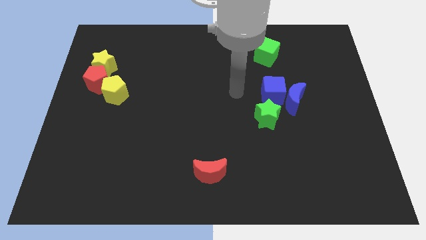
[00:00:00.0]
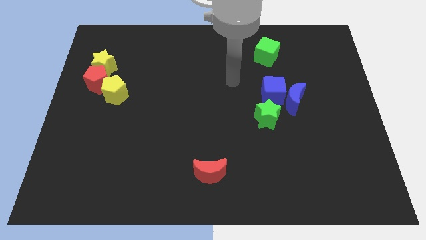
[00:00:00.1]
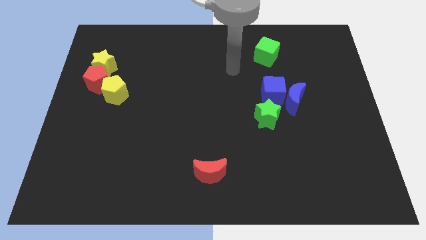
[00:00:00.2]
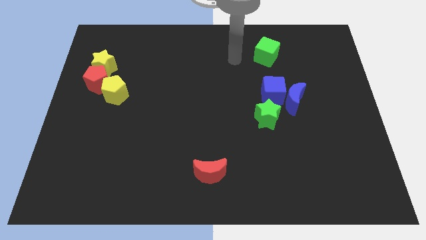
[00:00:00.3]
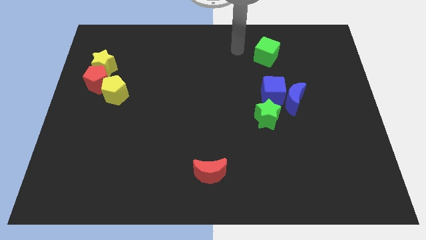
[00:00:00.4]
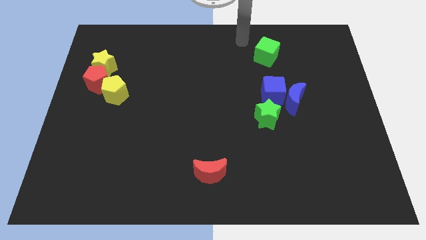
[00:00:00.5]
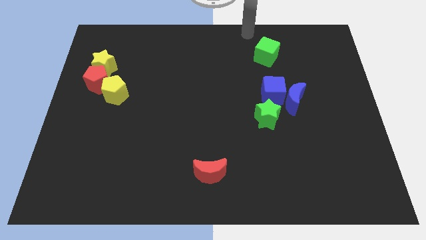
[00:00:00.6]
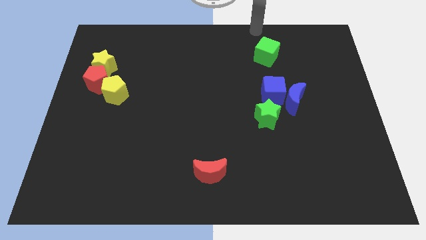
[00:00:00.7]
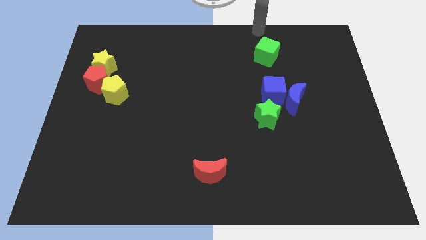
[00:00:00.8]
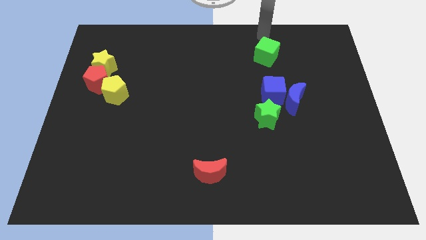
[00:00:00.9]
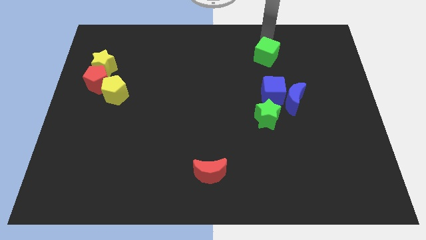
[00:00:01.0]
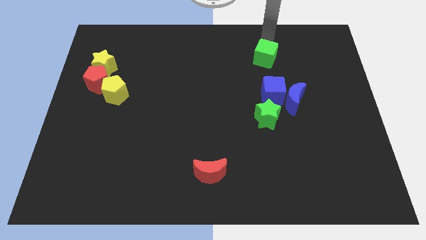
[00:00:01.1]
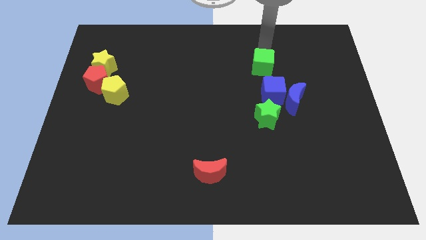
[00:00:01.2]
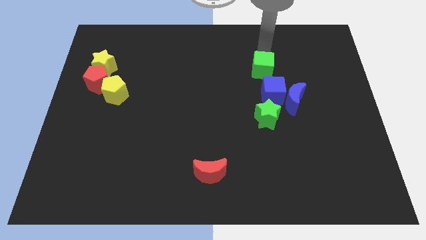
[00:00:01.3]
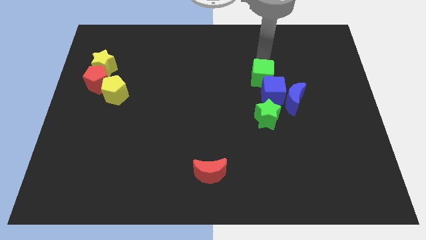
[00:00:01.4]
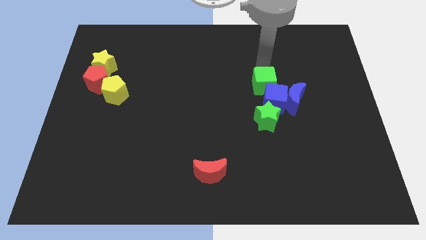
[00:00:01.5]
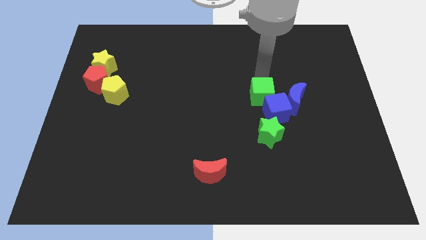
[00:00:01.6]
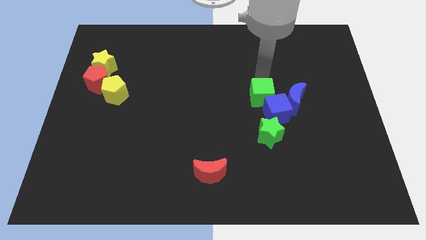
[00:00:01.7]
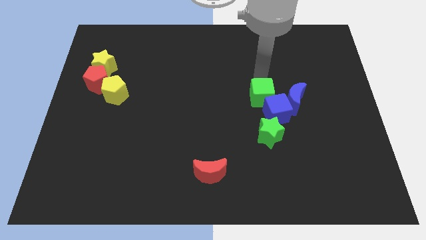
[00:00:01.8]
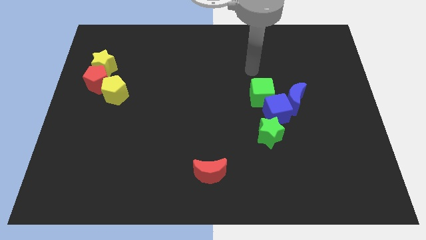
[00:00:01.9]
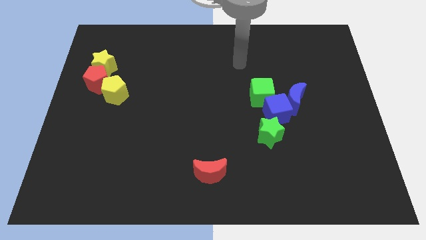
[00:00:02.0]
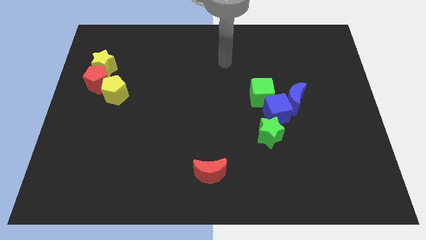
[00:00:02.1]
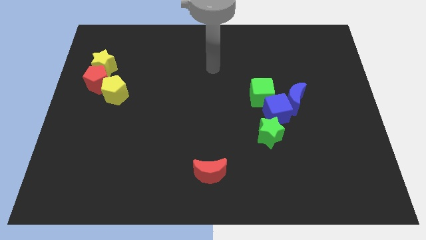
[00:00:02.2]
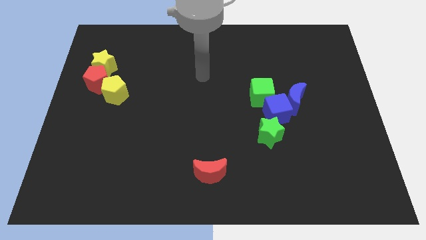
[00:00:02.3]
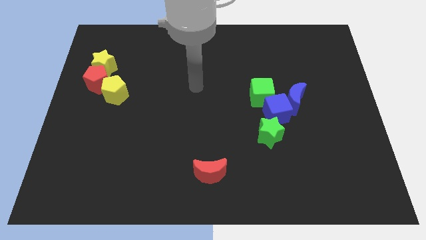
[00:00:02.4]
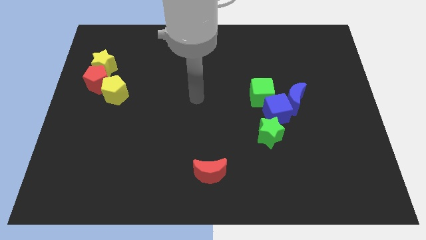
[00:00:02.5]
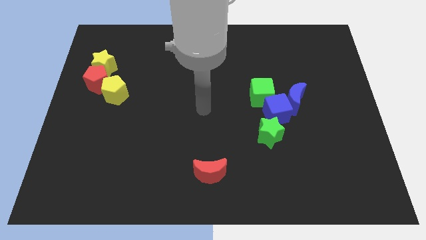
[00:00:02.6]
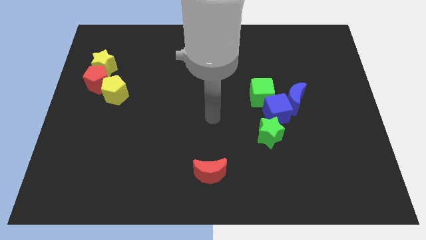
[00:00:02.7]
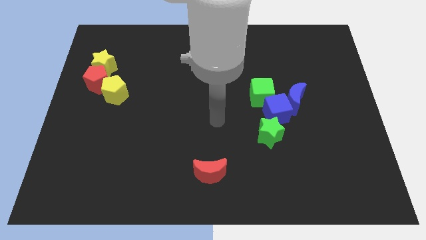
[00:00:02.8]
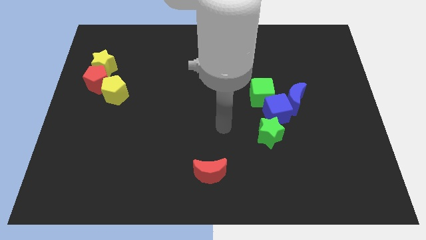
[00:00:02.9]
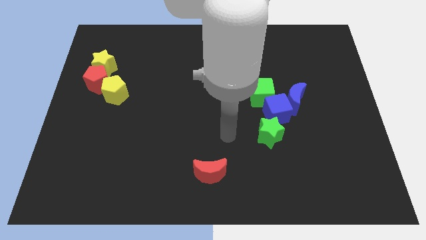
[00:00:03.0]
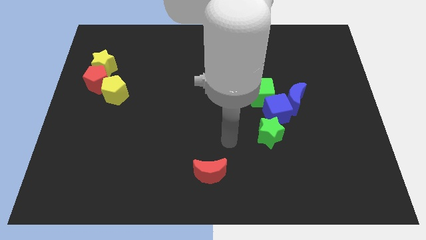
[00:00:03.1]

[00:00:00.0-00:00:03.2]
add the green cube to the group of both blue blocks and green star

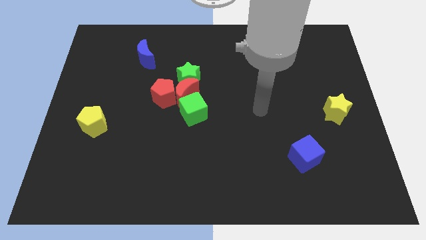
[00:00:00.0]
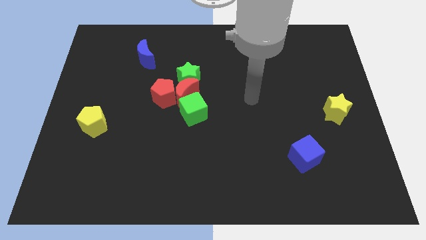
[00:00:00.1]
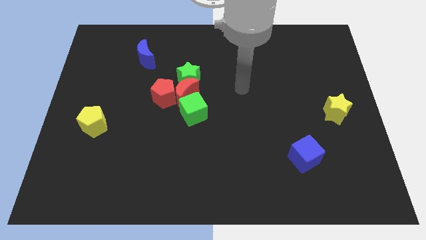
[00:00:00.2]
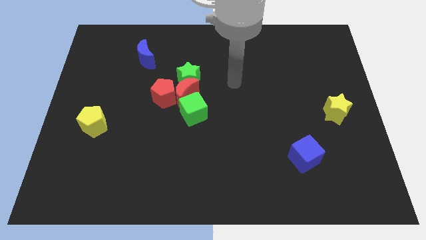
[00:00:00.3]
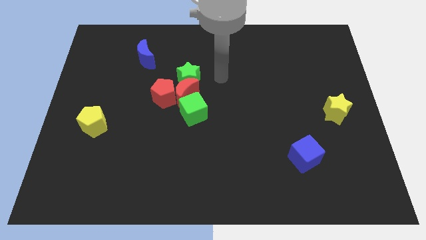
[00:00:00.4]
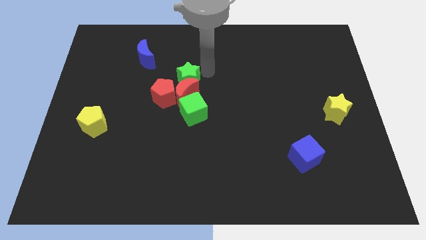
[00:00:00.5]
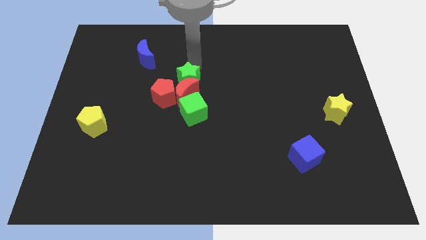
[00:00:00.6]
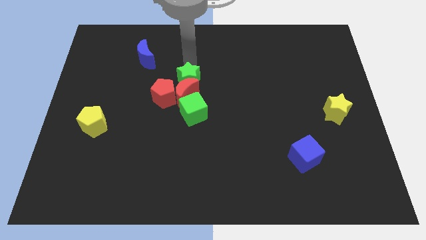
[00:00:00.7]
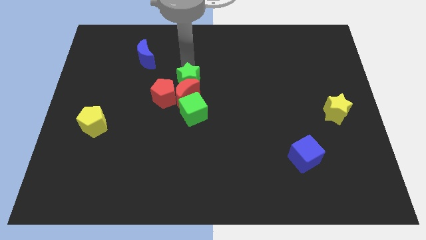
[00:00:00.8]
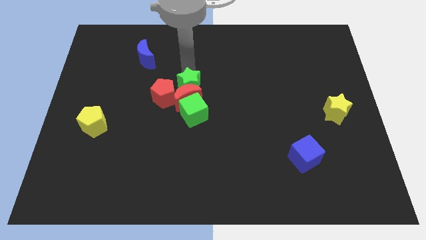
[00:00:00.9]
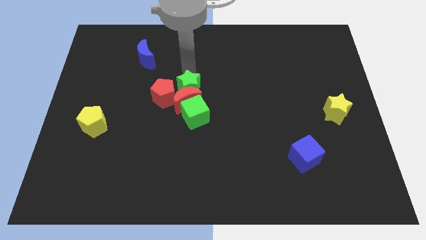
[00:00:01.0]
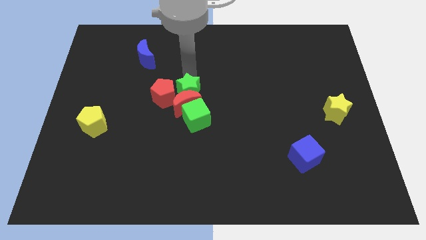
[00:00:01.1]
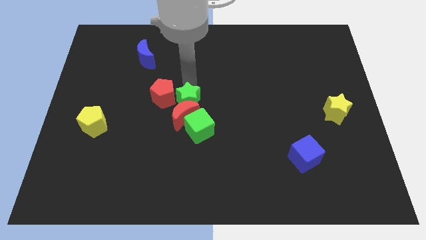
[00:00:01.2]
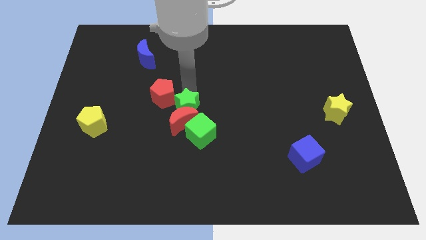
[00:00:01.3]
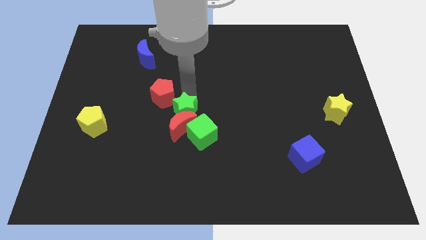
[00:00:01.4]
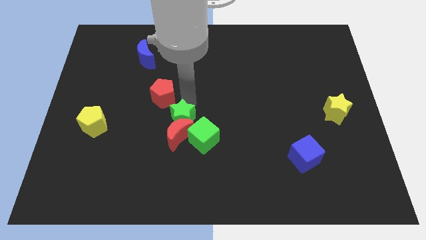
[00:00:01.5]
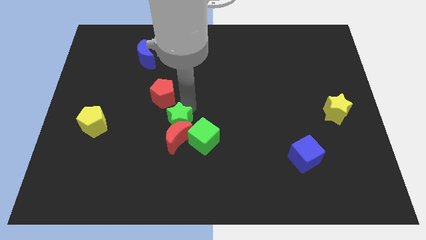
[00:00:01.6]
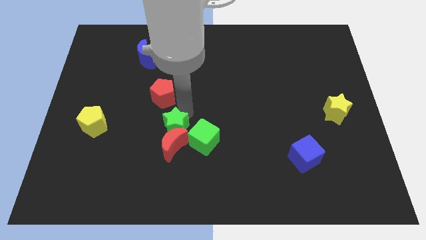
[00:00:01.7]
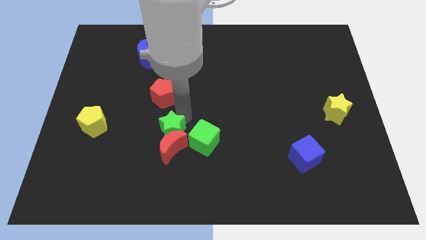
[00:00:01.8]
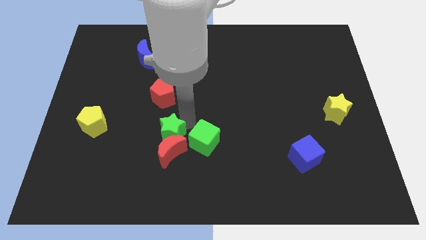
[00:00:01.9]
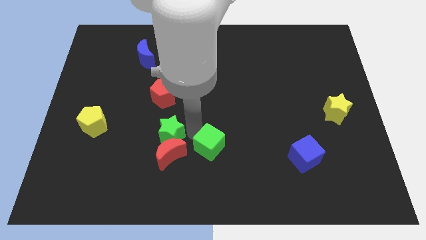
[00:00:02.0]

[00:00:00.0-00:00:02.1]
separate the group of blocks from the red pentagon

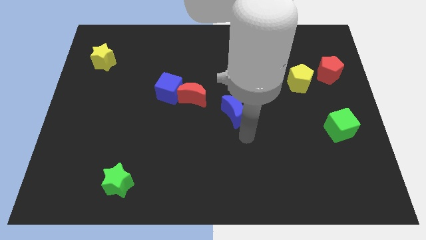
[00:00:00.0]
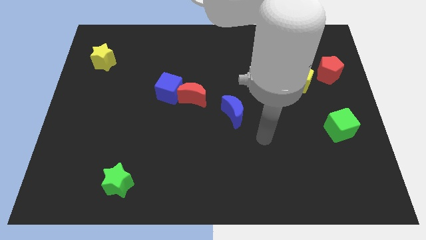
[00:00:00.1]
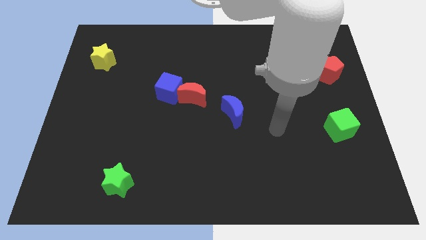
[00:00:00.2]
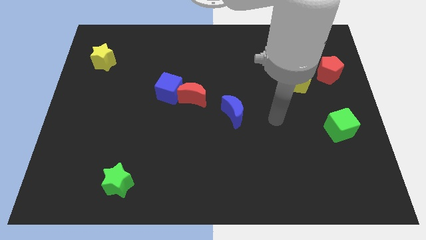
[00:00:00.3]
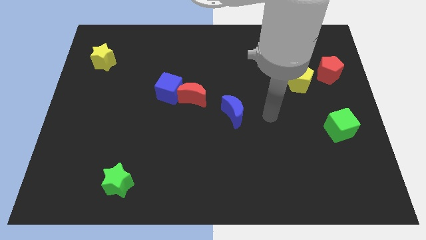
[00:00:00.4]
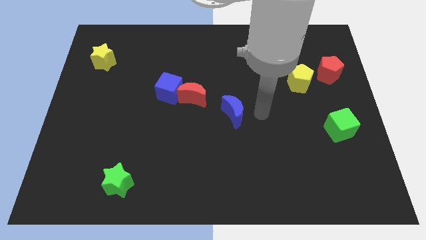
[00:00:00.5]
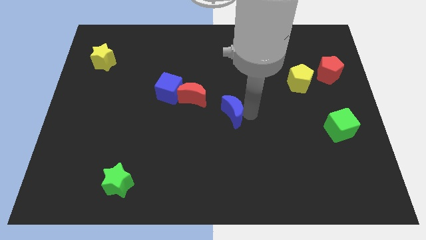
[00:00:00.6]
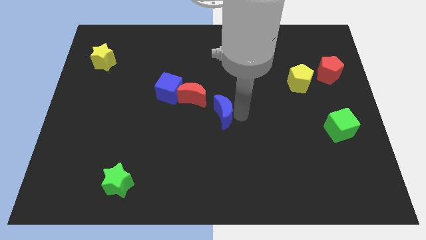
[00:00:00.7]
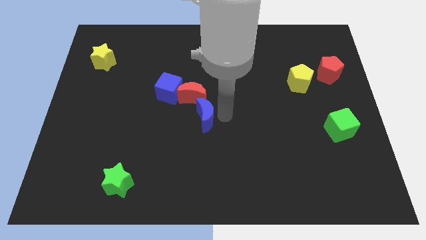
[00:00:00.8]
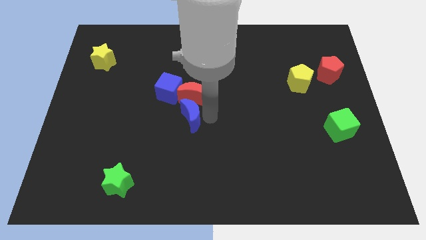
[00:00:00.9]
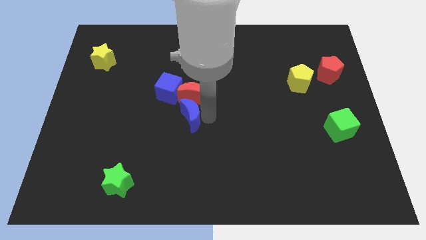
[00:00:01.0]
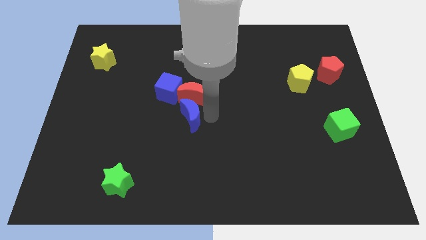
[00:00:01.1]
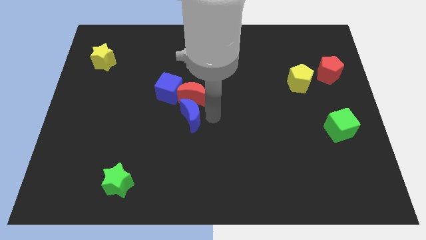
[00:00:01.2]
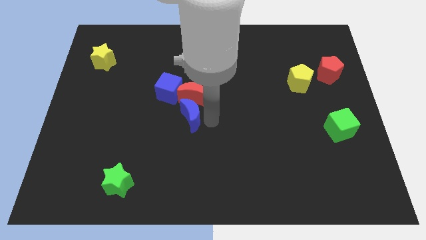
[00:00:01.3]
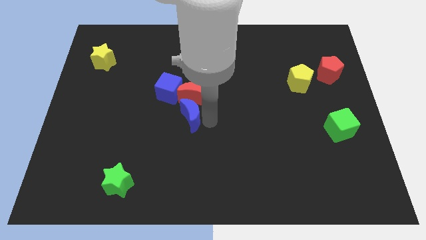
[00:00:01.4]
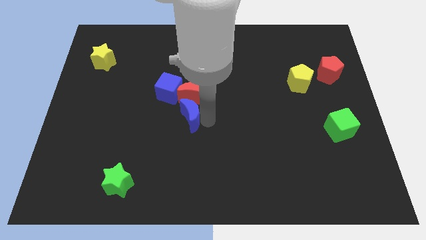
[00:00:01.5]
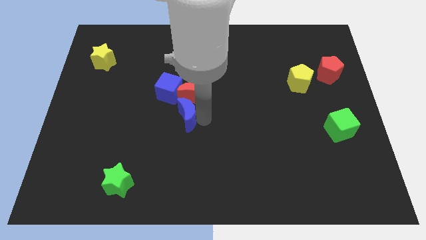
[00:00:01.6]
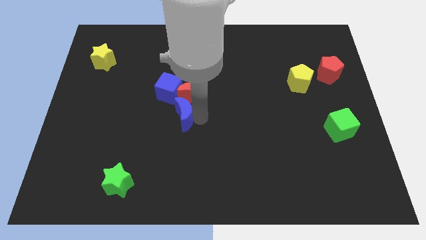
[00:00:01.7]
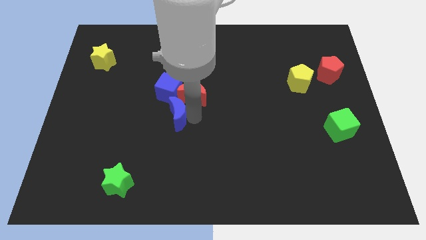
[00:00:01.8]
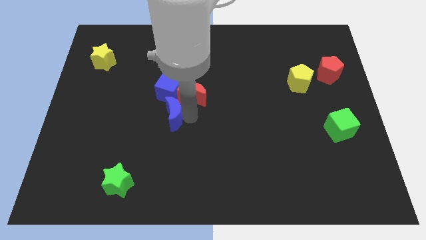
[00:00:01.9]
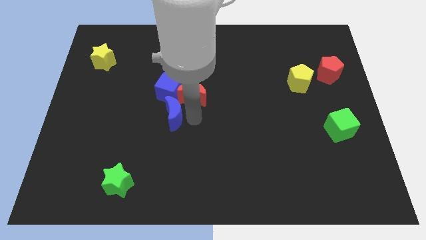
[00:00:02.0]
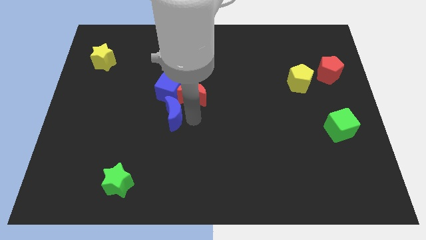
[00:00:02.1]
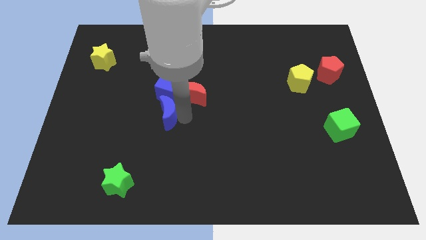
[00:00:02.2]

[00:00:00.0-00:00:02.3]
move blue moon below blue cube

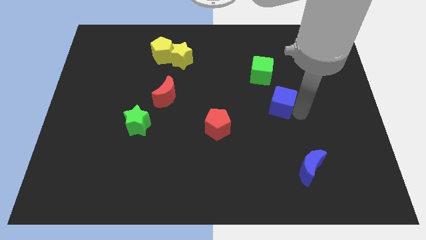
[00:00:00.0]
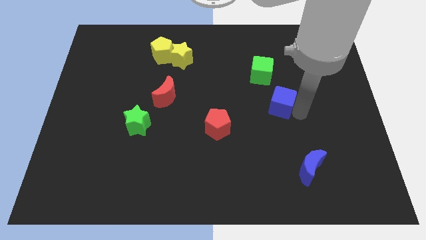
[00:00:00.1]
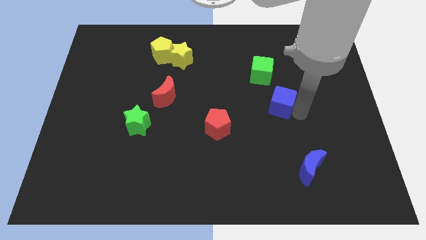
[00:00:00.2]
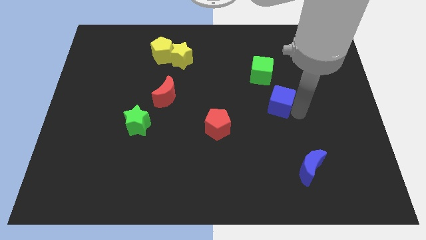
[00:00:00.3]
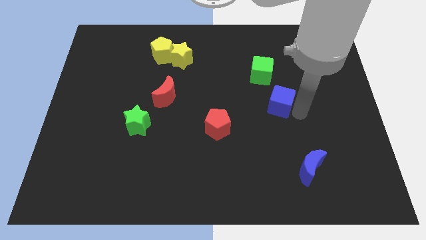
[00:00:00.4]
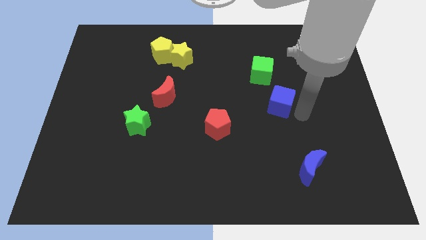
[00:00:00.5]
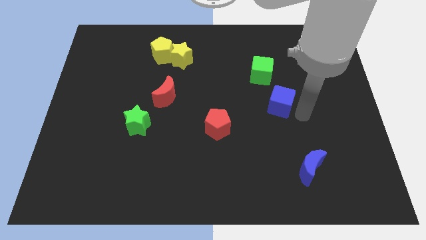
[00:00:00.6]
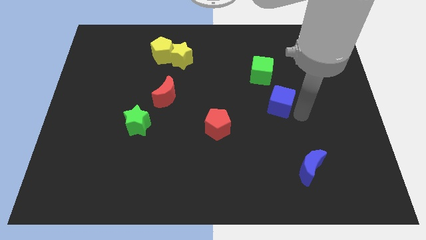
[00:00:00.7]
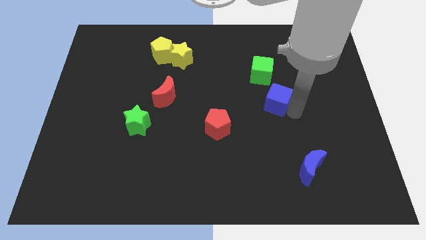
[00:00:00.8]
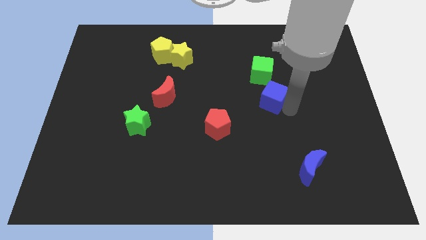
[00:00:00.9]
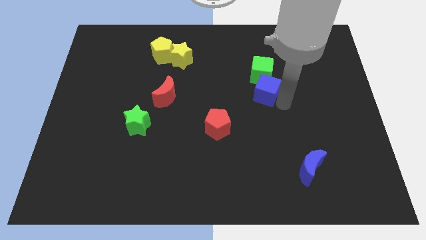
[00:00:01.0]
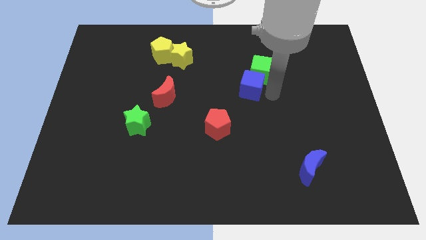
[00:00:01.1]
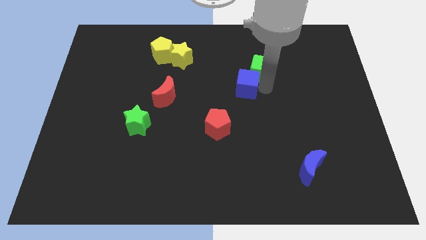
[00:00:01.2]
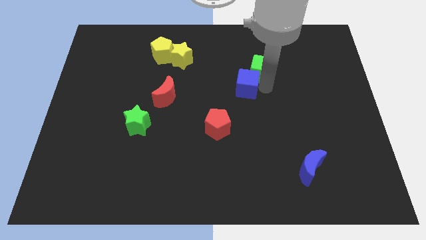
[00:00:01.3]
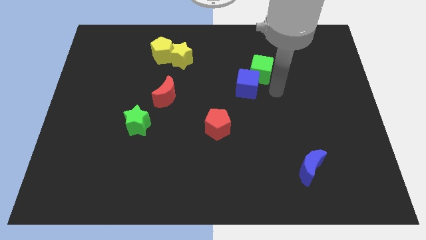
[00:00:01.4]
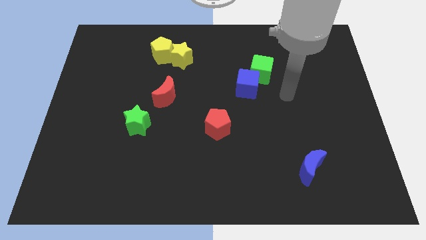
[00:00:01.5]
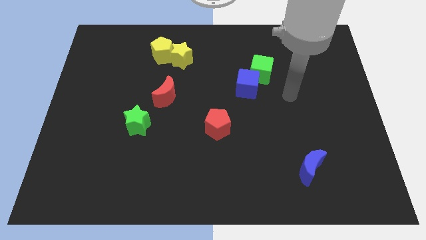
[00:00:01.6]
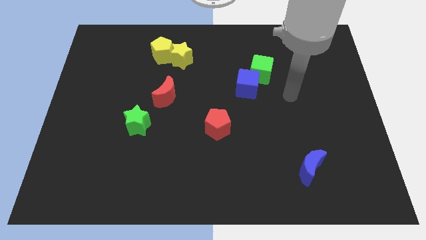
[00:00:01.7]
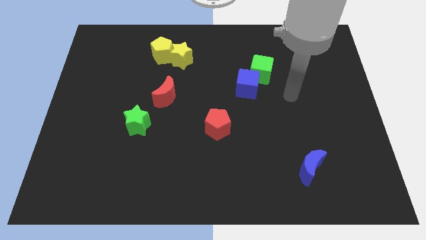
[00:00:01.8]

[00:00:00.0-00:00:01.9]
put the blue cube into the green cube
